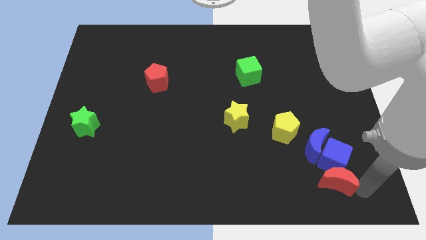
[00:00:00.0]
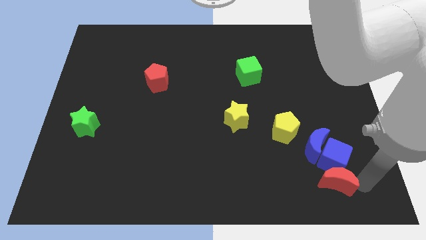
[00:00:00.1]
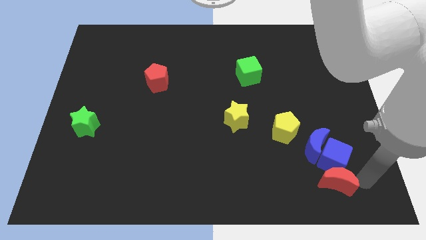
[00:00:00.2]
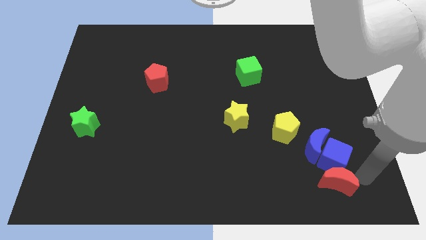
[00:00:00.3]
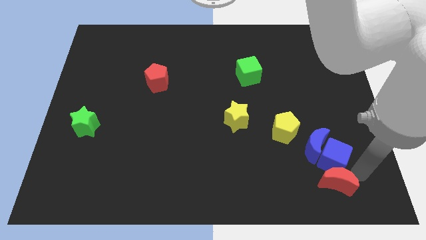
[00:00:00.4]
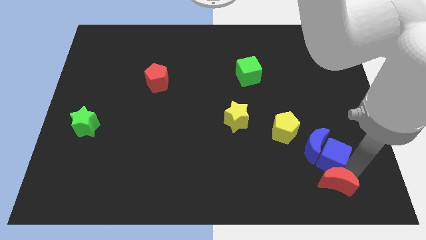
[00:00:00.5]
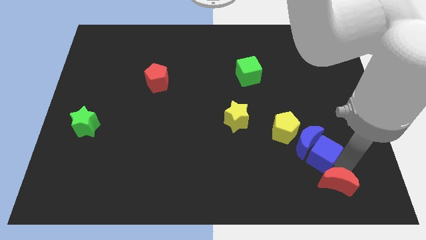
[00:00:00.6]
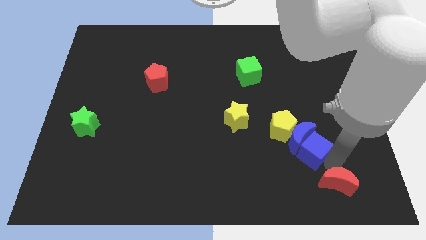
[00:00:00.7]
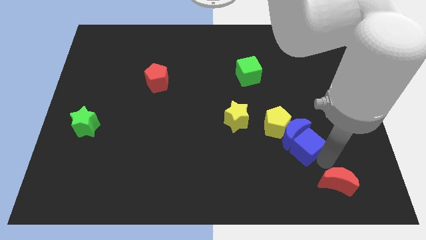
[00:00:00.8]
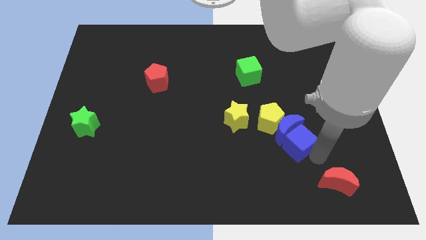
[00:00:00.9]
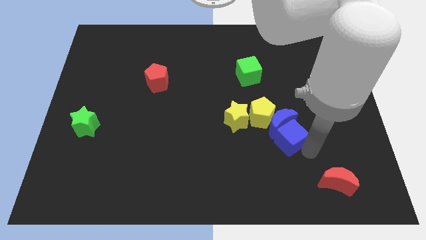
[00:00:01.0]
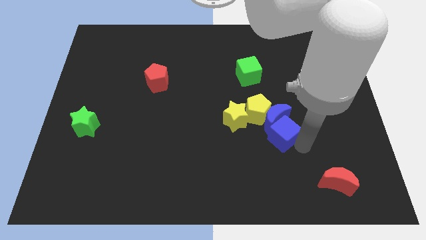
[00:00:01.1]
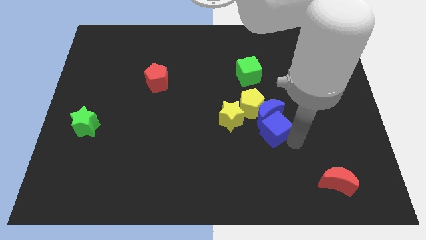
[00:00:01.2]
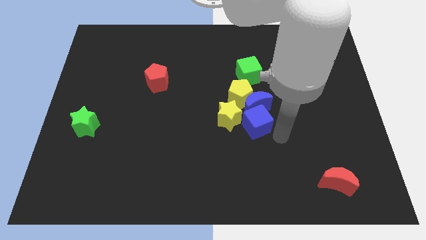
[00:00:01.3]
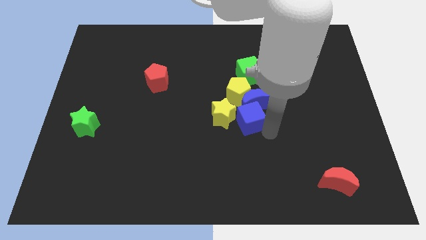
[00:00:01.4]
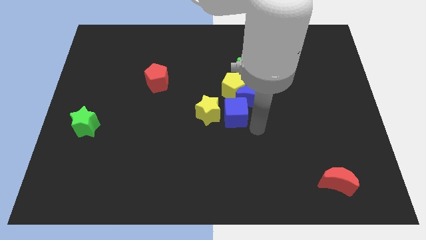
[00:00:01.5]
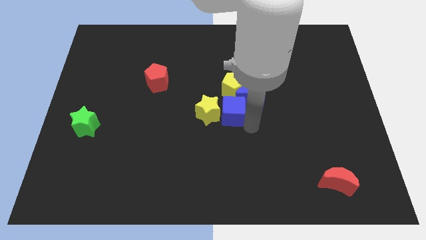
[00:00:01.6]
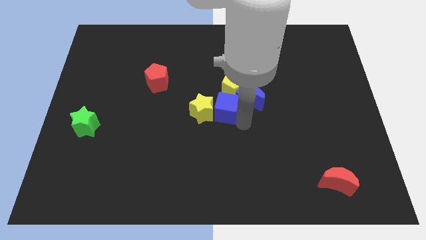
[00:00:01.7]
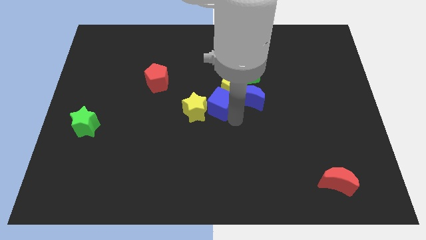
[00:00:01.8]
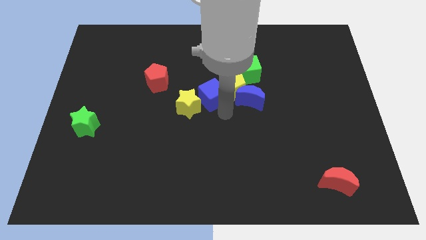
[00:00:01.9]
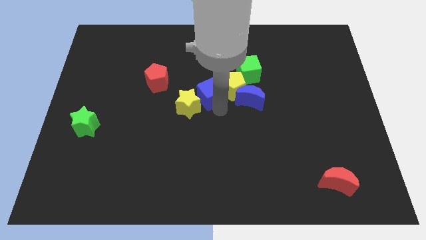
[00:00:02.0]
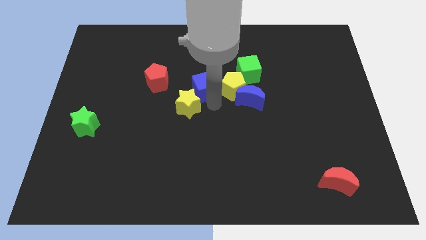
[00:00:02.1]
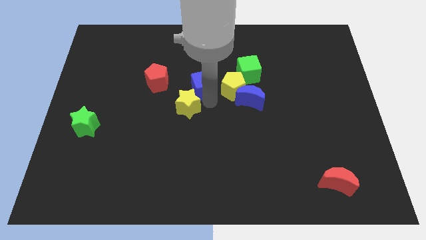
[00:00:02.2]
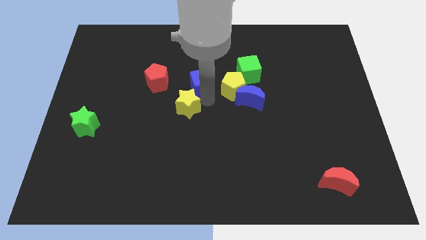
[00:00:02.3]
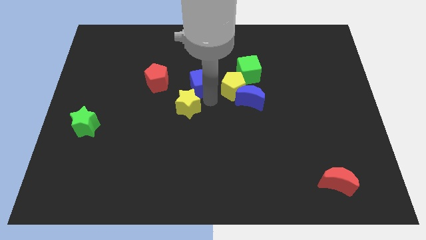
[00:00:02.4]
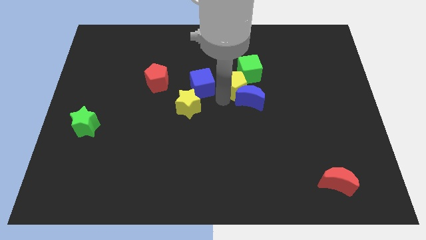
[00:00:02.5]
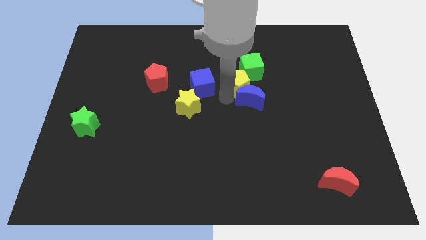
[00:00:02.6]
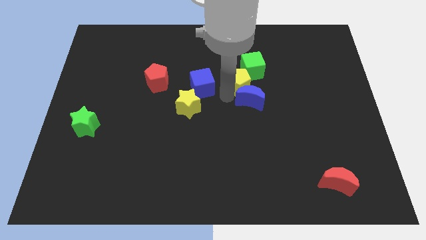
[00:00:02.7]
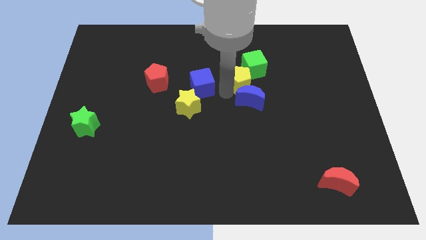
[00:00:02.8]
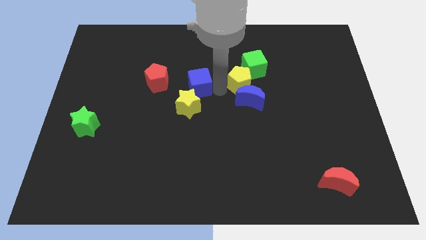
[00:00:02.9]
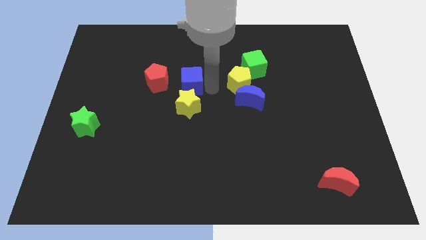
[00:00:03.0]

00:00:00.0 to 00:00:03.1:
place blue cube to the right of red pentagon

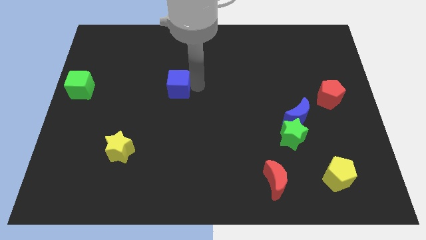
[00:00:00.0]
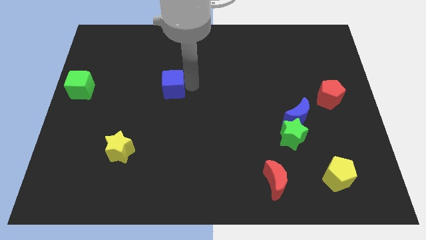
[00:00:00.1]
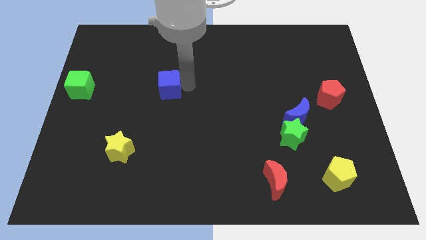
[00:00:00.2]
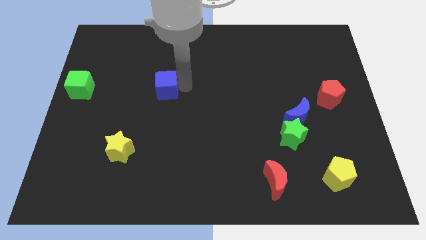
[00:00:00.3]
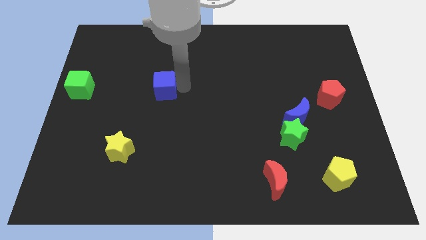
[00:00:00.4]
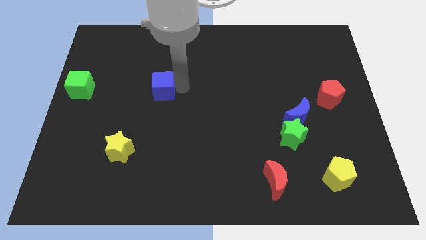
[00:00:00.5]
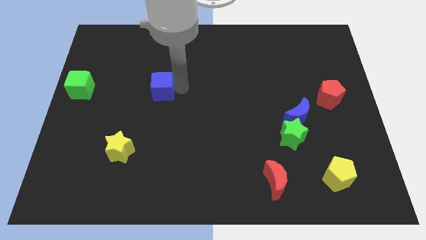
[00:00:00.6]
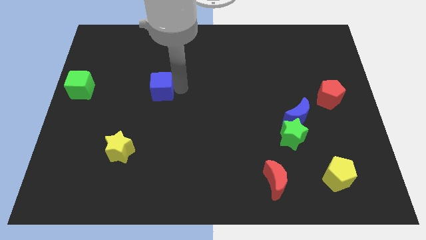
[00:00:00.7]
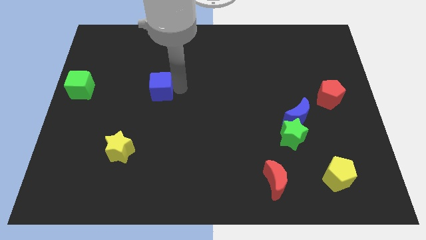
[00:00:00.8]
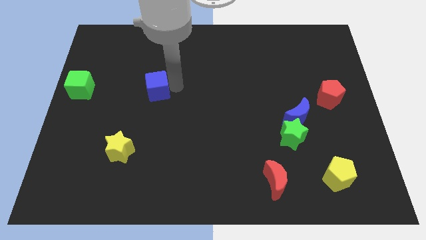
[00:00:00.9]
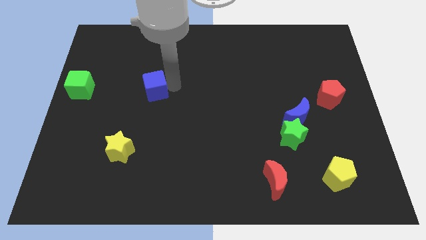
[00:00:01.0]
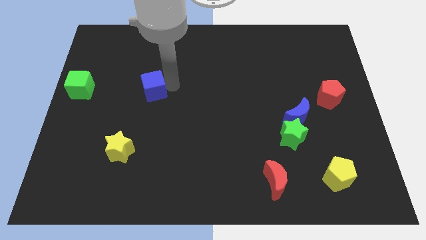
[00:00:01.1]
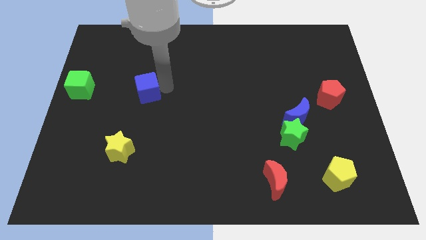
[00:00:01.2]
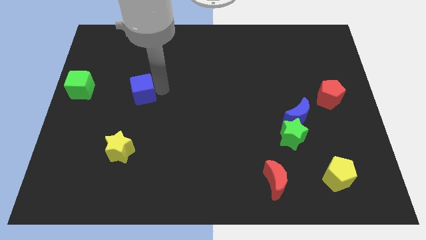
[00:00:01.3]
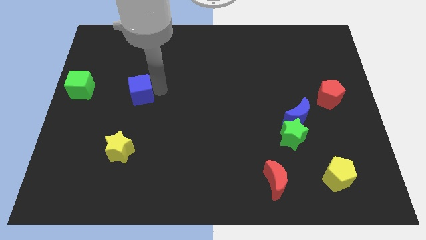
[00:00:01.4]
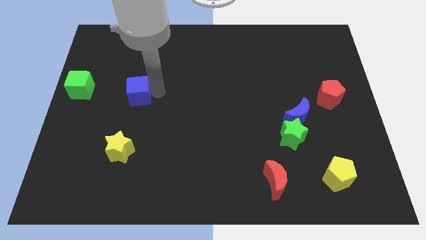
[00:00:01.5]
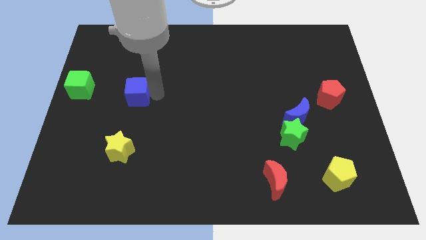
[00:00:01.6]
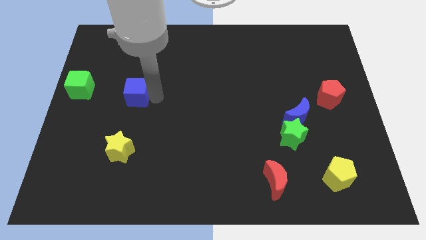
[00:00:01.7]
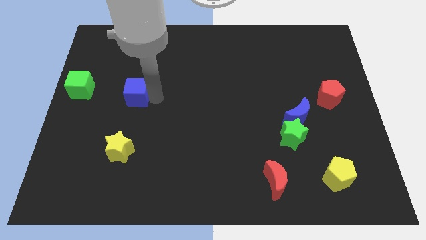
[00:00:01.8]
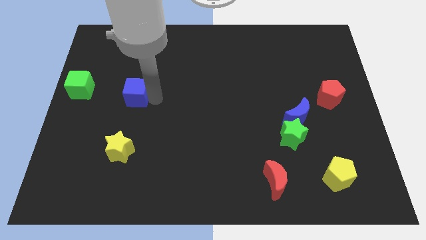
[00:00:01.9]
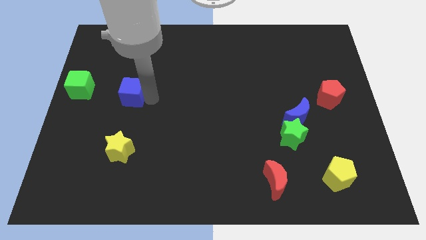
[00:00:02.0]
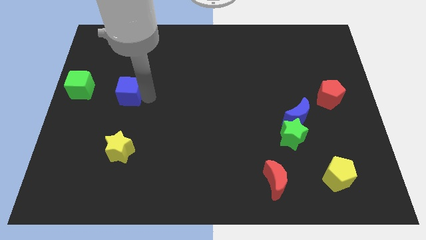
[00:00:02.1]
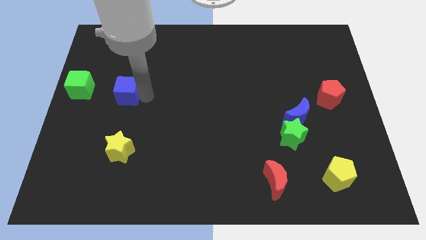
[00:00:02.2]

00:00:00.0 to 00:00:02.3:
place blue cube above yellow star

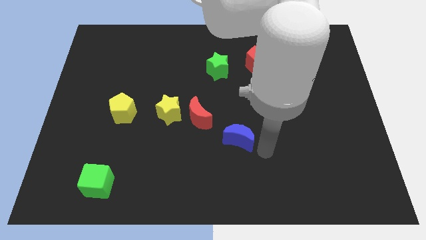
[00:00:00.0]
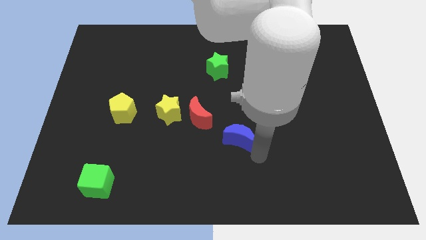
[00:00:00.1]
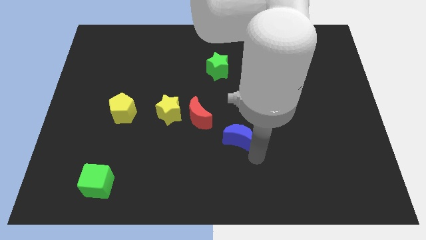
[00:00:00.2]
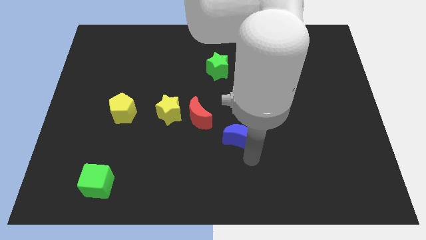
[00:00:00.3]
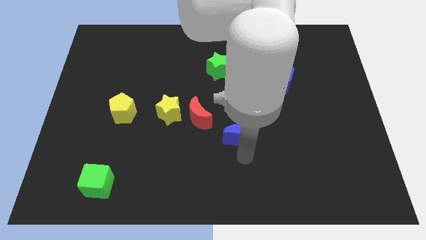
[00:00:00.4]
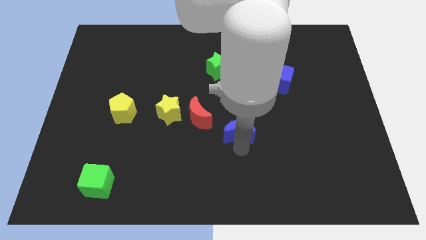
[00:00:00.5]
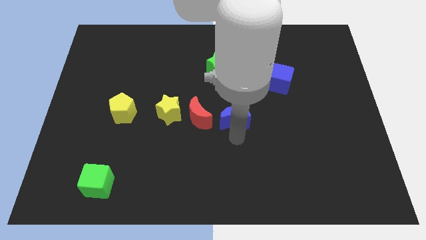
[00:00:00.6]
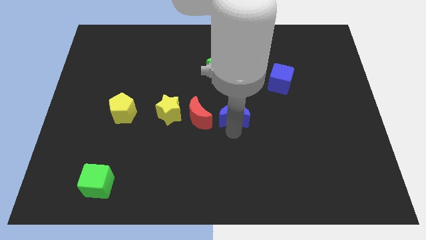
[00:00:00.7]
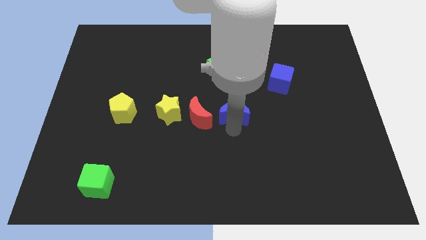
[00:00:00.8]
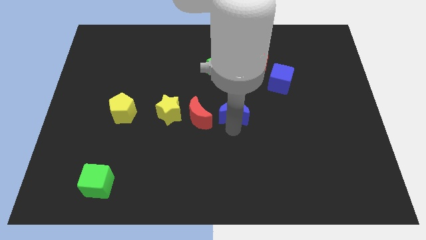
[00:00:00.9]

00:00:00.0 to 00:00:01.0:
slight move blue moon upwards

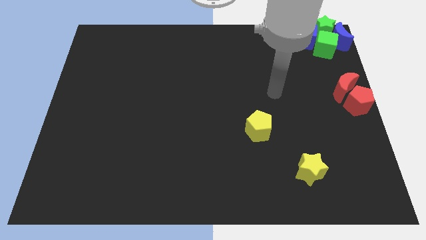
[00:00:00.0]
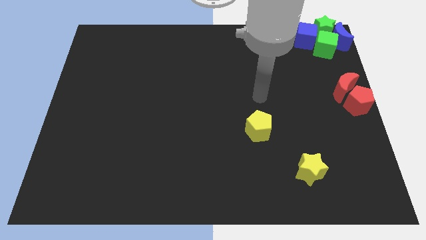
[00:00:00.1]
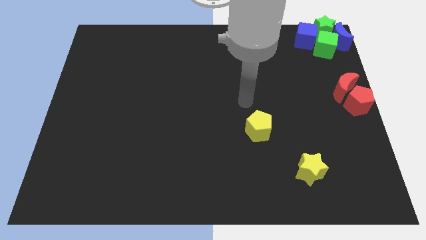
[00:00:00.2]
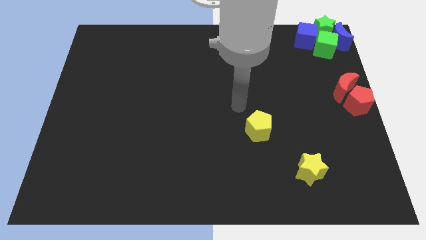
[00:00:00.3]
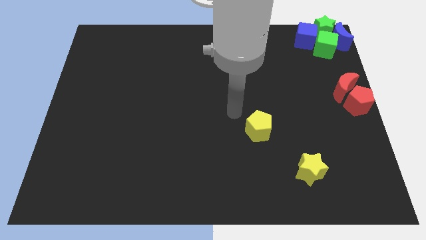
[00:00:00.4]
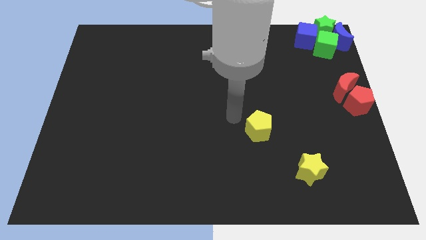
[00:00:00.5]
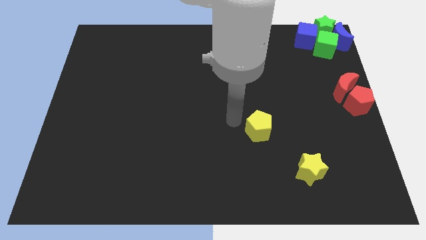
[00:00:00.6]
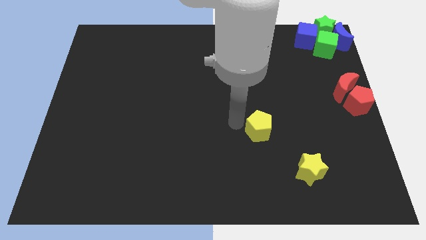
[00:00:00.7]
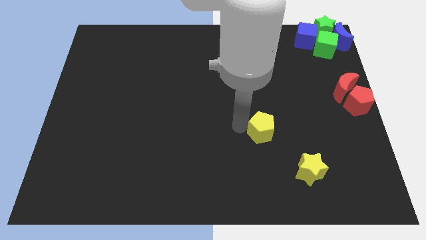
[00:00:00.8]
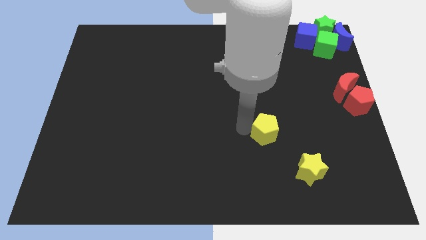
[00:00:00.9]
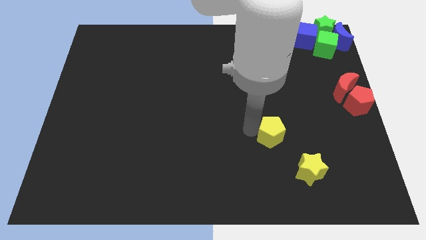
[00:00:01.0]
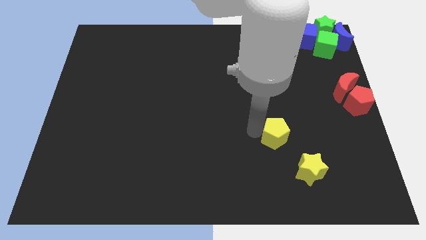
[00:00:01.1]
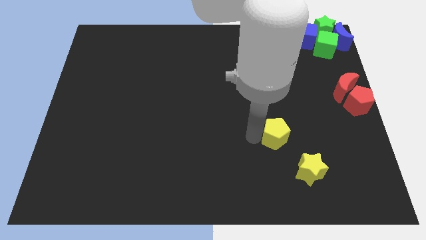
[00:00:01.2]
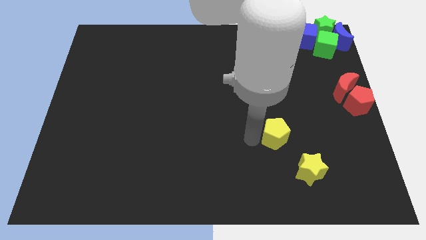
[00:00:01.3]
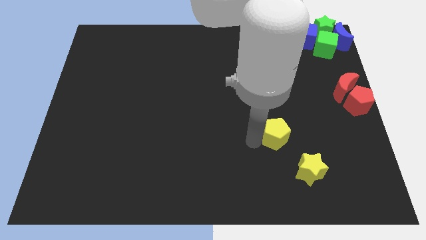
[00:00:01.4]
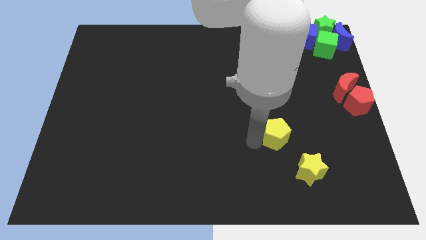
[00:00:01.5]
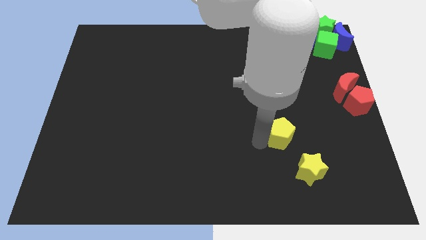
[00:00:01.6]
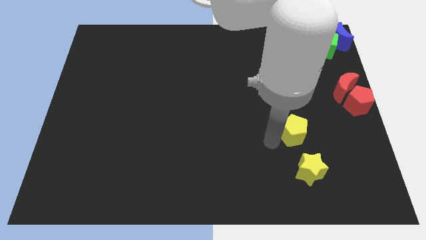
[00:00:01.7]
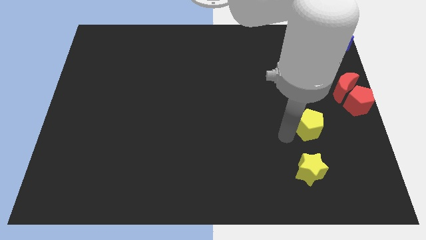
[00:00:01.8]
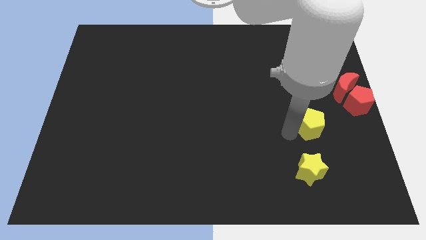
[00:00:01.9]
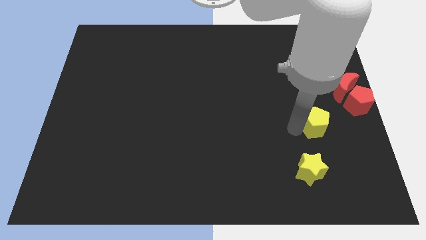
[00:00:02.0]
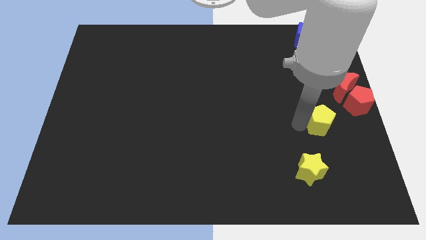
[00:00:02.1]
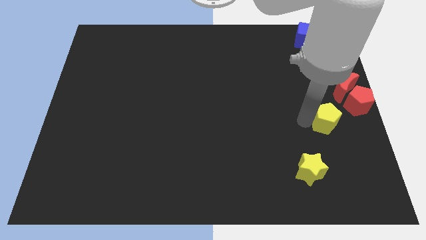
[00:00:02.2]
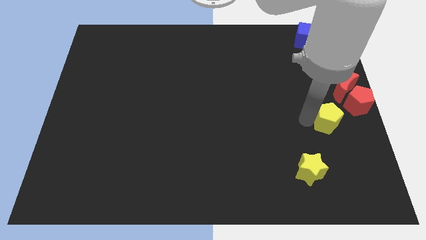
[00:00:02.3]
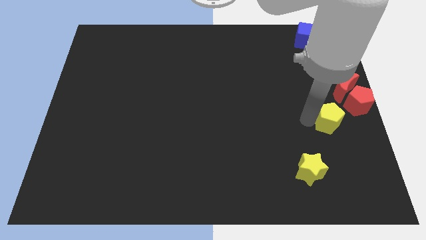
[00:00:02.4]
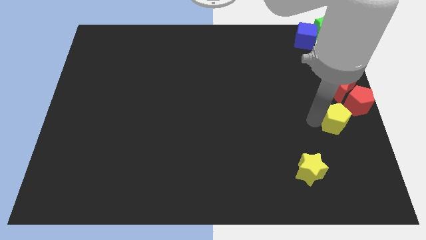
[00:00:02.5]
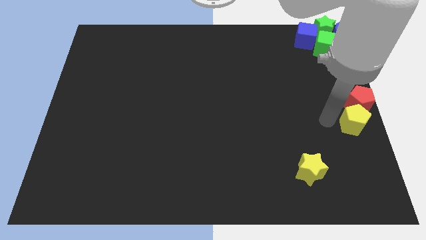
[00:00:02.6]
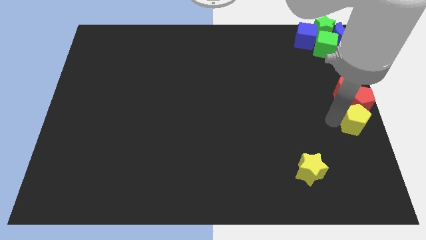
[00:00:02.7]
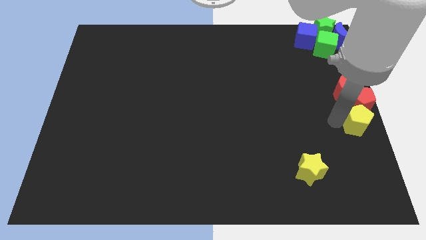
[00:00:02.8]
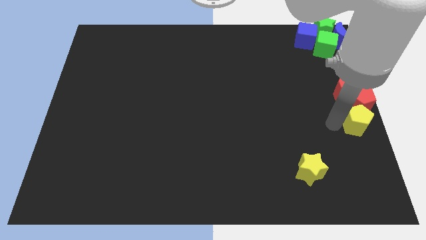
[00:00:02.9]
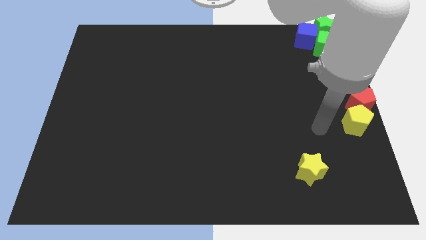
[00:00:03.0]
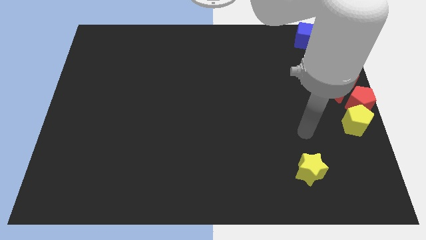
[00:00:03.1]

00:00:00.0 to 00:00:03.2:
slide the yellow pentagon diagonally top right to the yellow star
